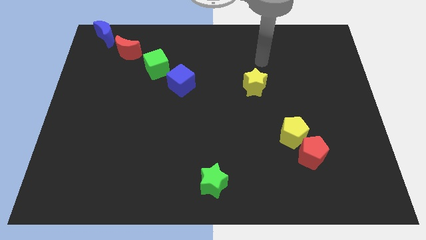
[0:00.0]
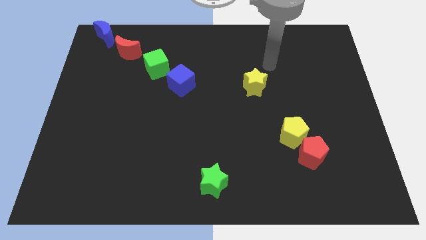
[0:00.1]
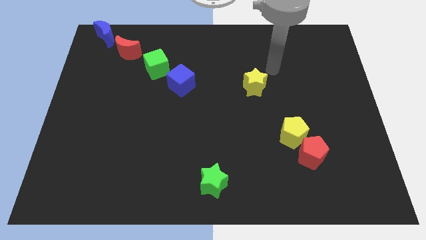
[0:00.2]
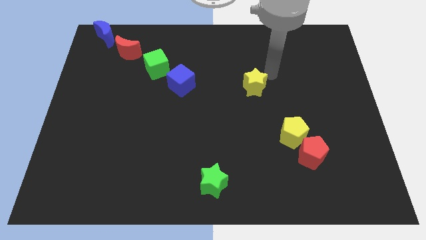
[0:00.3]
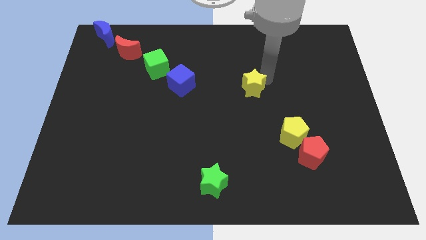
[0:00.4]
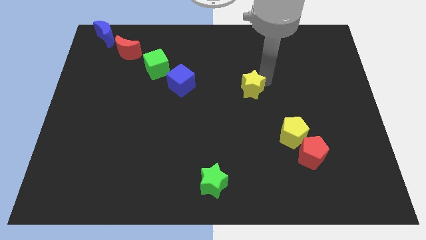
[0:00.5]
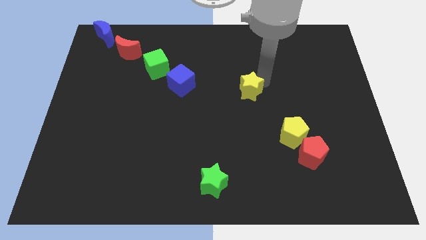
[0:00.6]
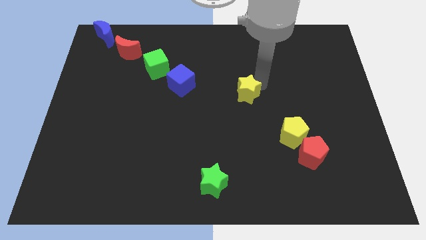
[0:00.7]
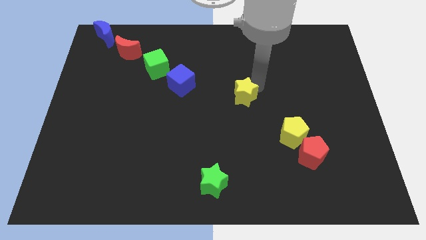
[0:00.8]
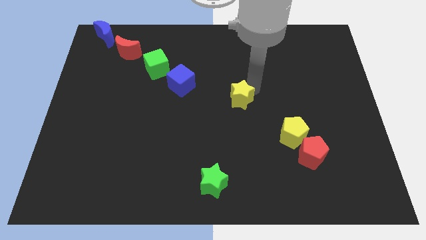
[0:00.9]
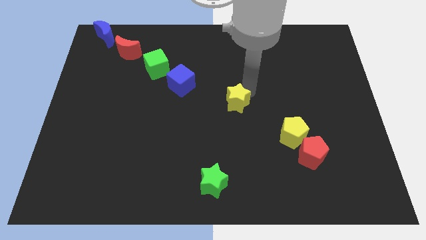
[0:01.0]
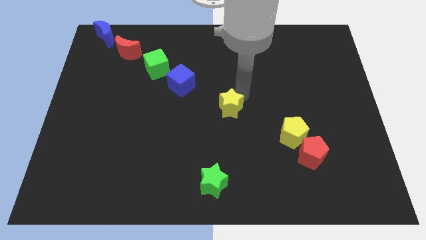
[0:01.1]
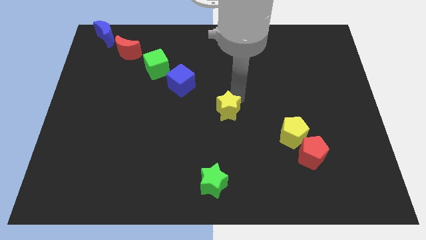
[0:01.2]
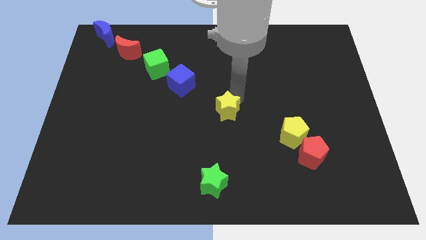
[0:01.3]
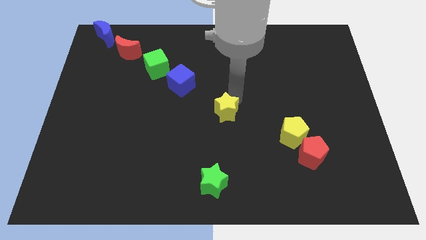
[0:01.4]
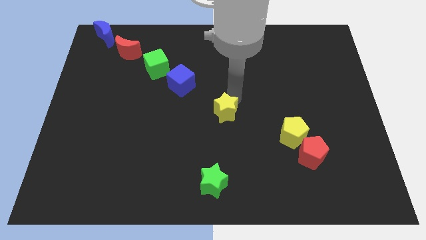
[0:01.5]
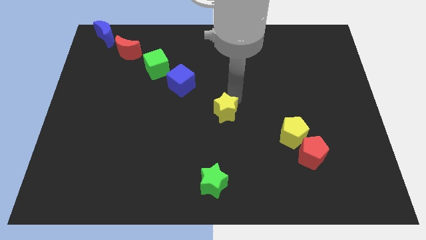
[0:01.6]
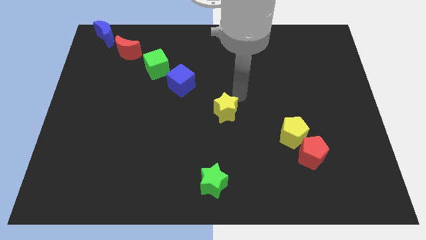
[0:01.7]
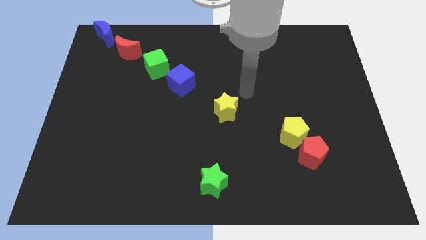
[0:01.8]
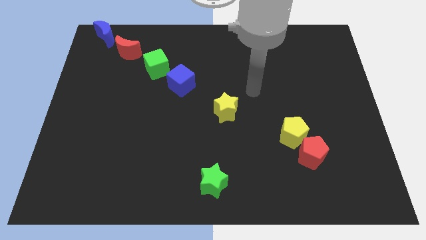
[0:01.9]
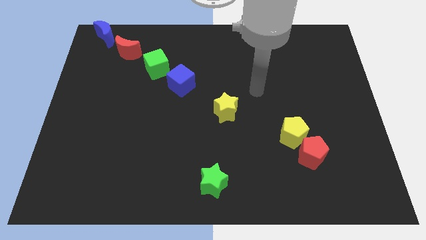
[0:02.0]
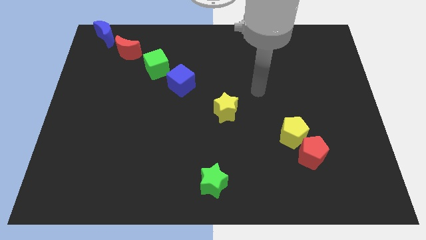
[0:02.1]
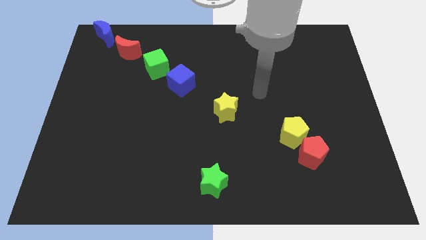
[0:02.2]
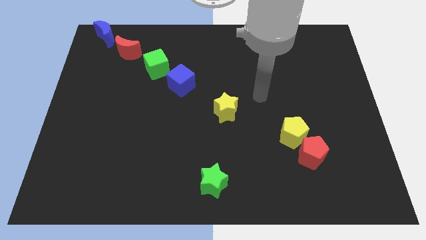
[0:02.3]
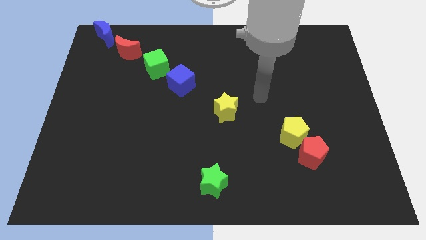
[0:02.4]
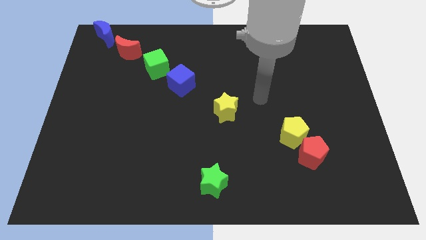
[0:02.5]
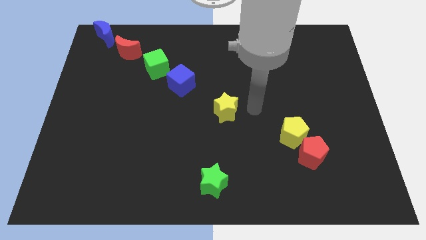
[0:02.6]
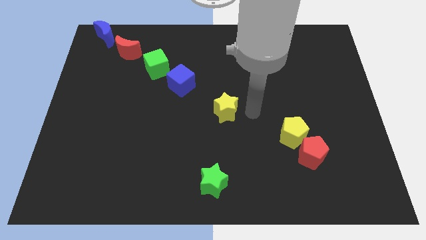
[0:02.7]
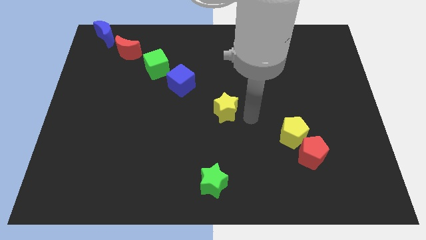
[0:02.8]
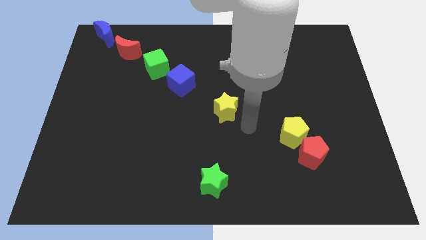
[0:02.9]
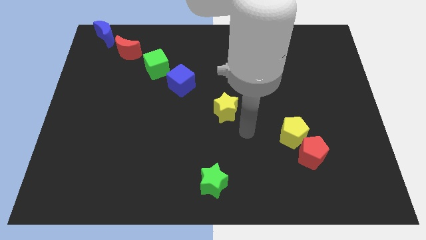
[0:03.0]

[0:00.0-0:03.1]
place yellow star in between yellow pentagon and blue cube

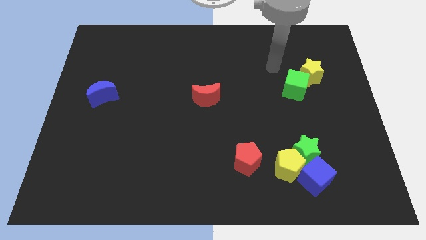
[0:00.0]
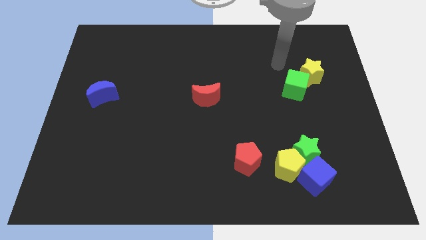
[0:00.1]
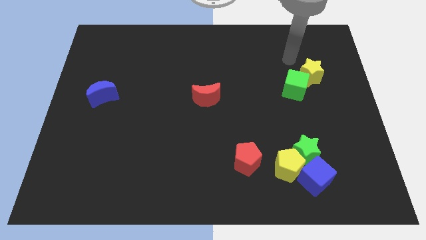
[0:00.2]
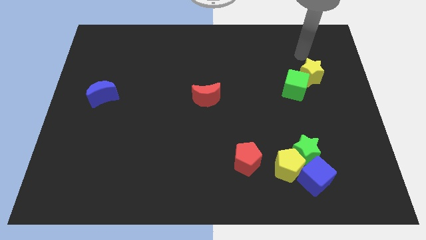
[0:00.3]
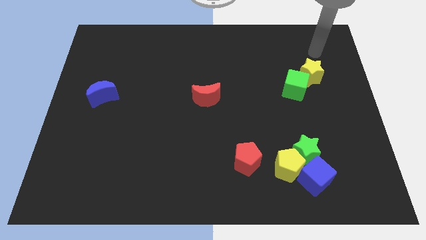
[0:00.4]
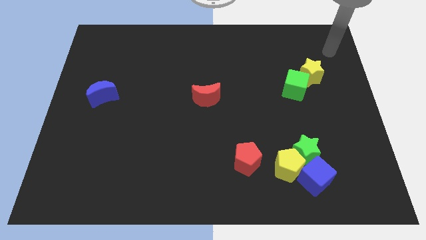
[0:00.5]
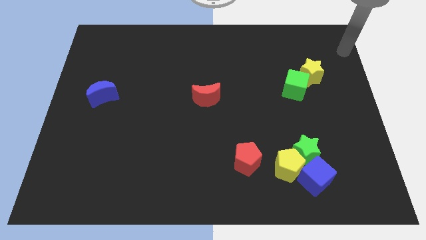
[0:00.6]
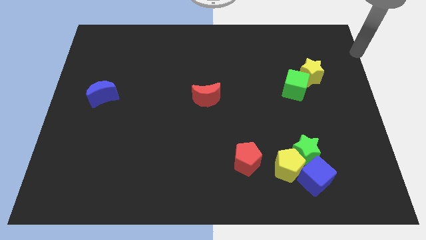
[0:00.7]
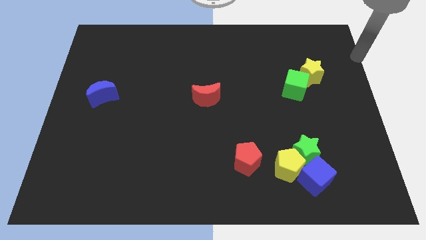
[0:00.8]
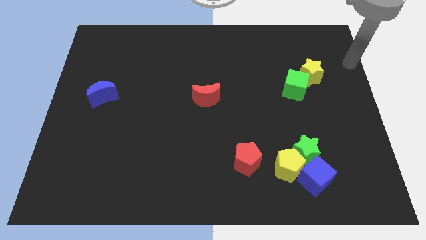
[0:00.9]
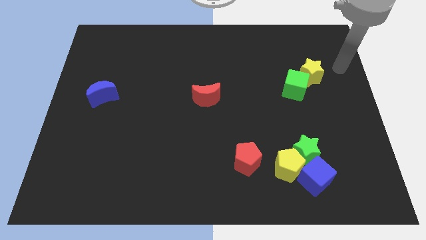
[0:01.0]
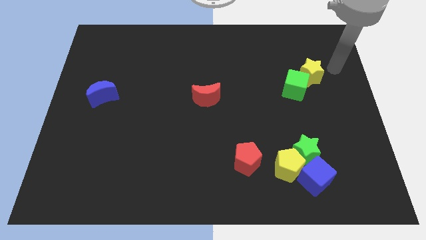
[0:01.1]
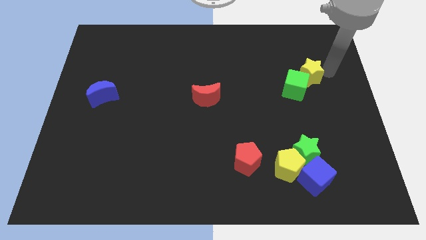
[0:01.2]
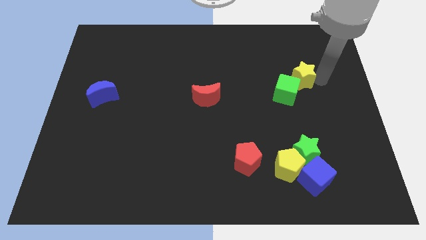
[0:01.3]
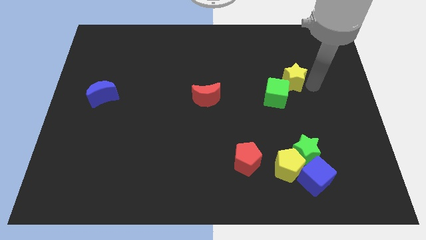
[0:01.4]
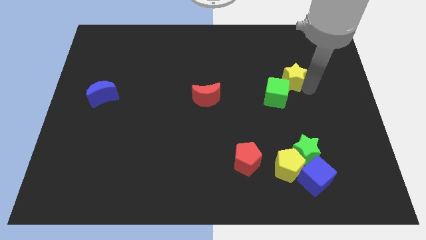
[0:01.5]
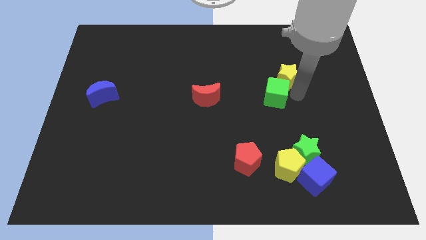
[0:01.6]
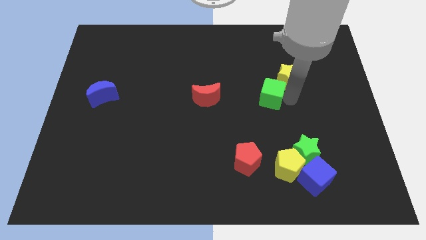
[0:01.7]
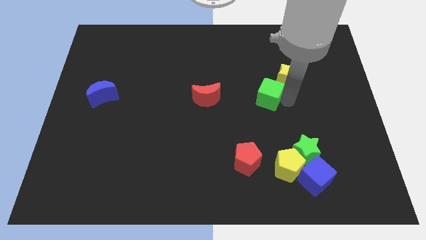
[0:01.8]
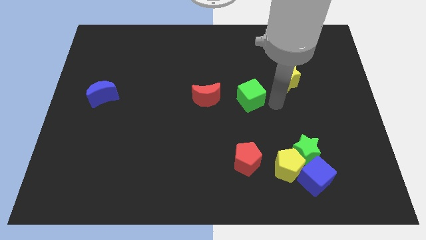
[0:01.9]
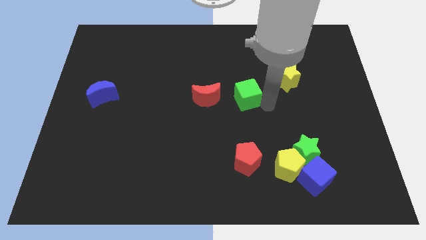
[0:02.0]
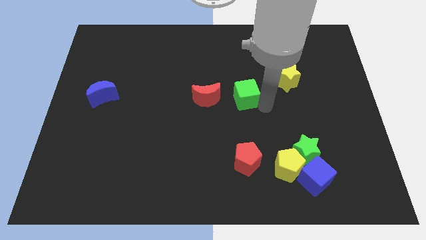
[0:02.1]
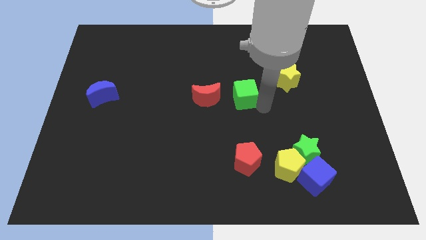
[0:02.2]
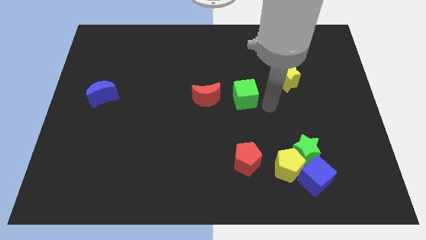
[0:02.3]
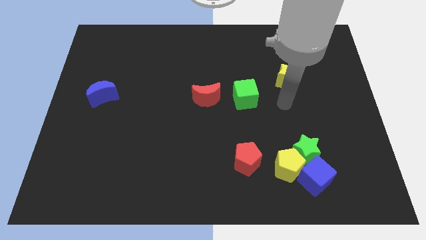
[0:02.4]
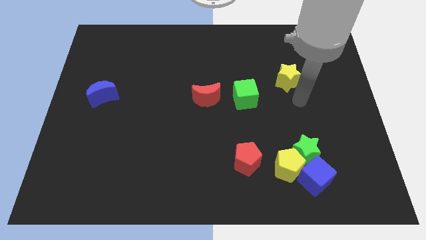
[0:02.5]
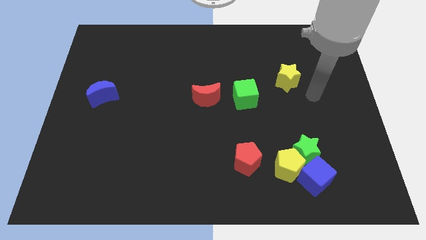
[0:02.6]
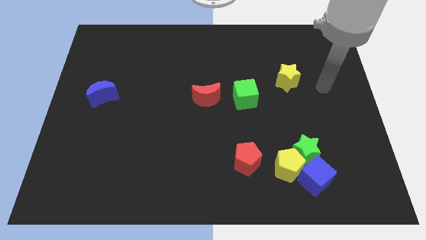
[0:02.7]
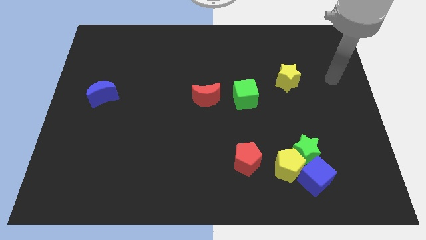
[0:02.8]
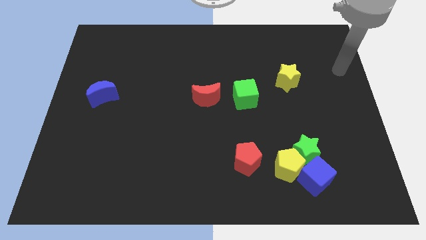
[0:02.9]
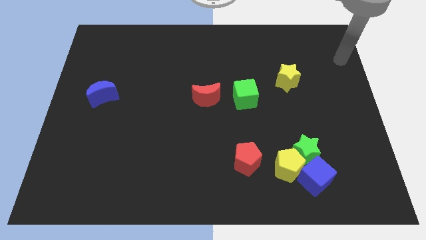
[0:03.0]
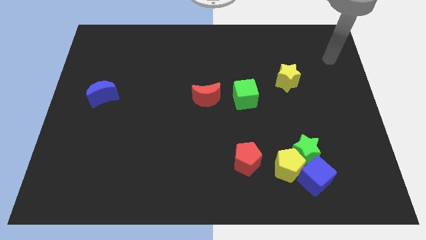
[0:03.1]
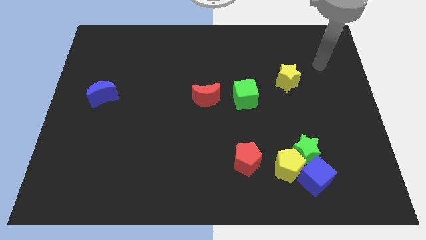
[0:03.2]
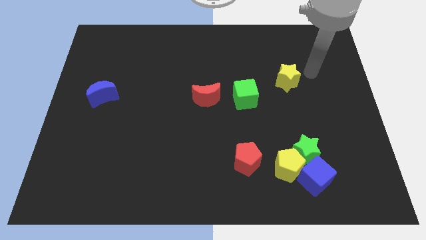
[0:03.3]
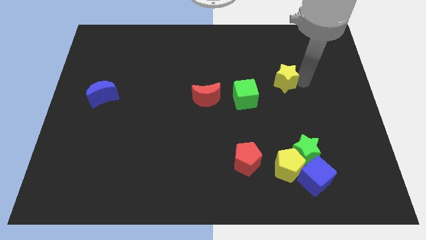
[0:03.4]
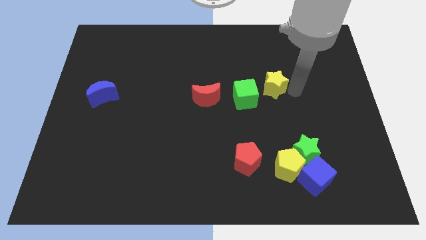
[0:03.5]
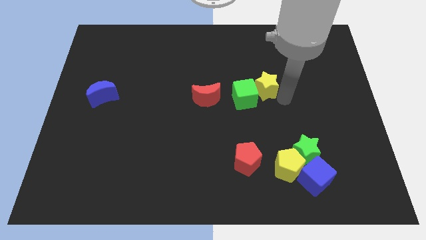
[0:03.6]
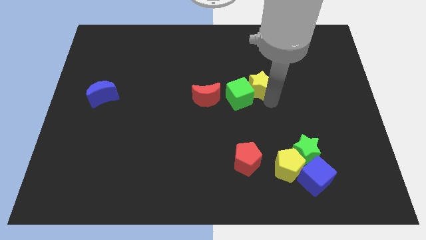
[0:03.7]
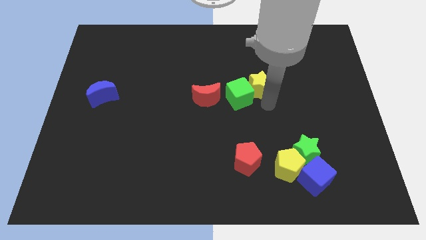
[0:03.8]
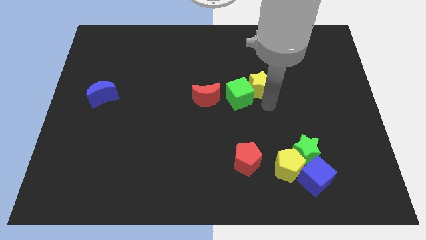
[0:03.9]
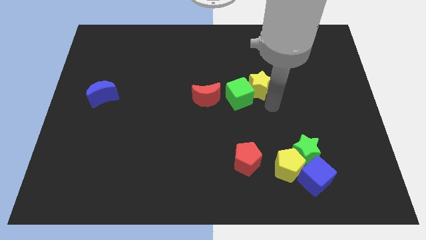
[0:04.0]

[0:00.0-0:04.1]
slide the green cube and the yellow star towards the red moon

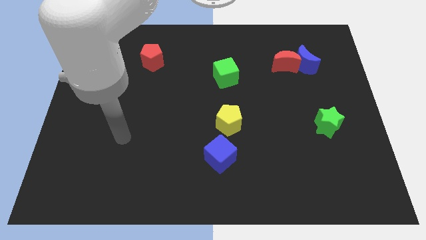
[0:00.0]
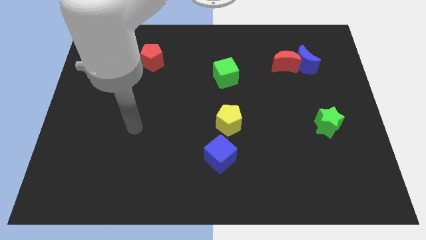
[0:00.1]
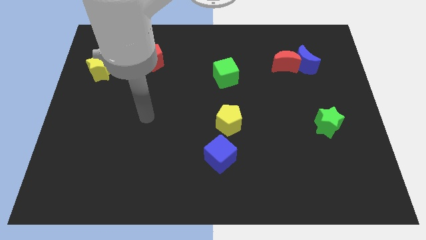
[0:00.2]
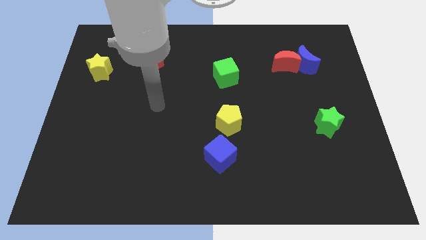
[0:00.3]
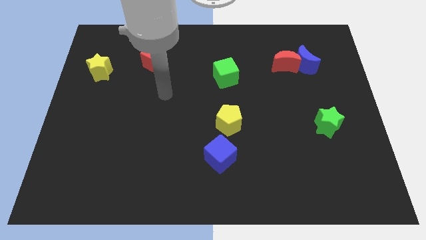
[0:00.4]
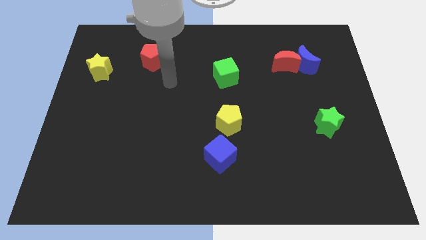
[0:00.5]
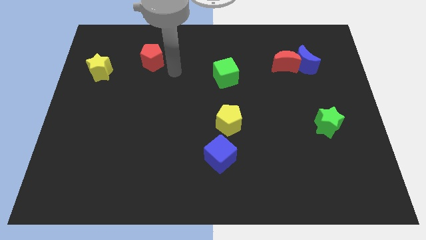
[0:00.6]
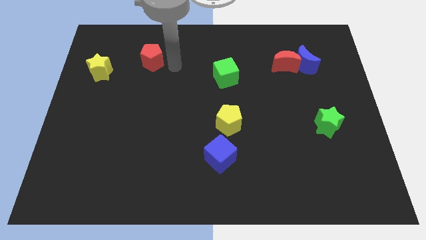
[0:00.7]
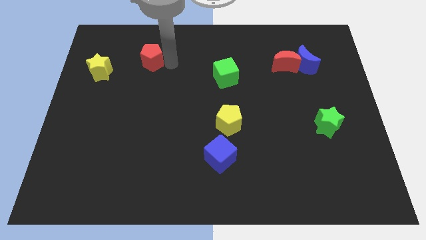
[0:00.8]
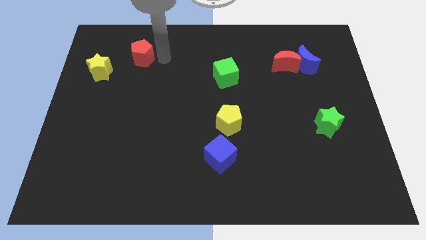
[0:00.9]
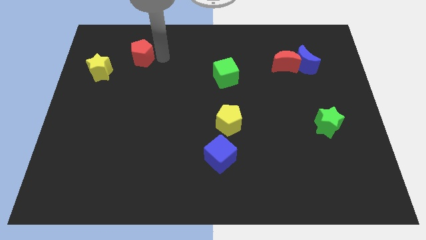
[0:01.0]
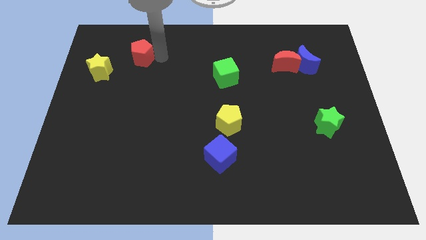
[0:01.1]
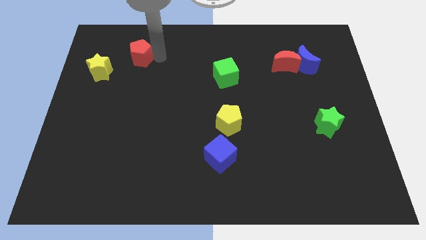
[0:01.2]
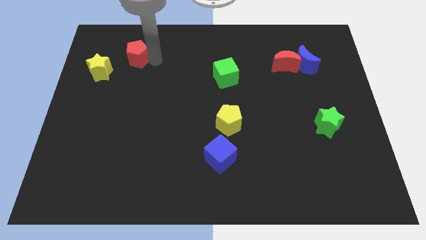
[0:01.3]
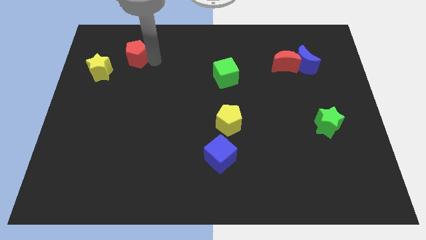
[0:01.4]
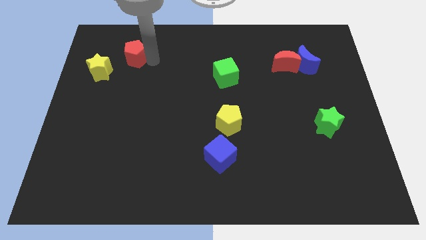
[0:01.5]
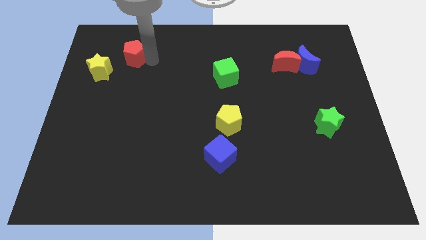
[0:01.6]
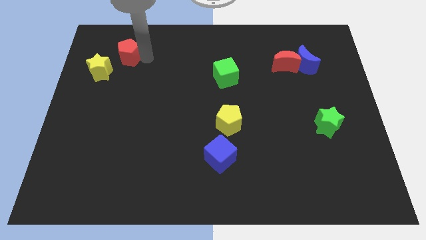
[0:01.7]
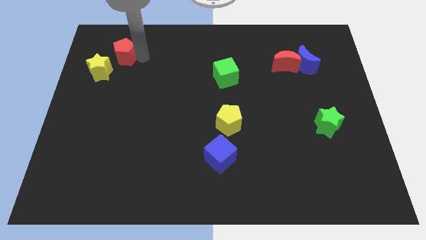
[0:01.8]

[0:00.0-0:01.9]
touch the bottom of red pentagon
